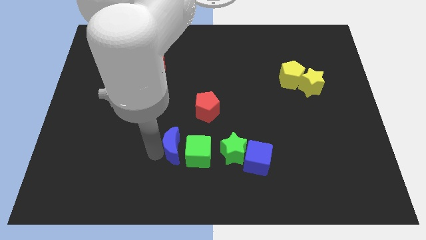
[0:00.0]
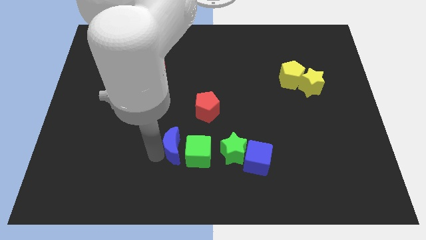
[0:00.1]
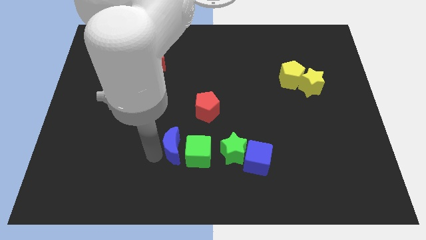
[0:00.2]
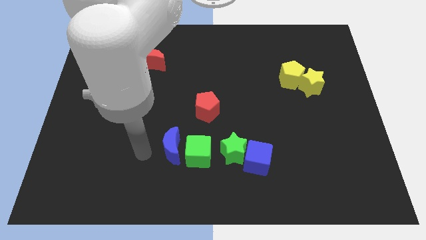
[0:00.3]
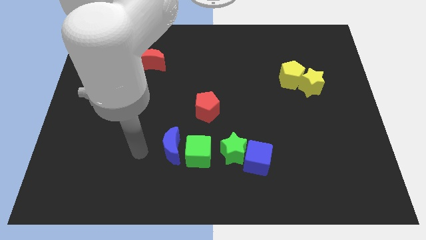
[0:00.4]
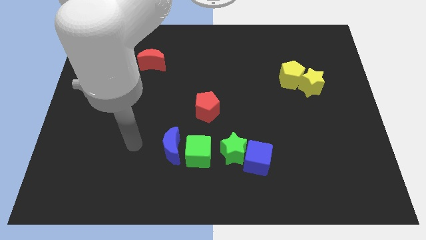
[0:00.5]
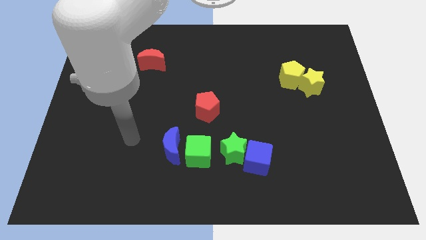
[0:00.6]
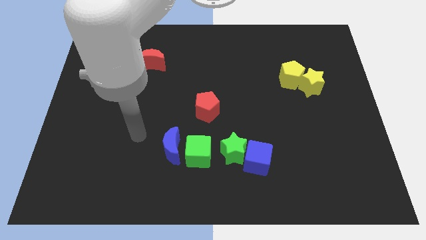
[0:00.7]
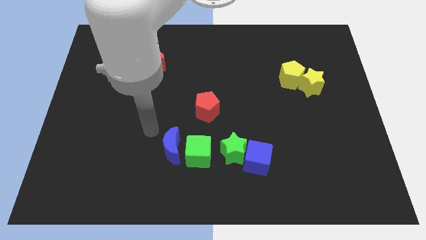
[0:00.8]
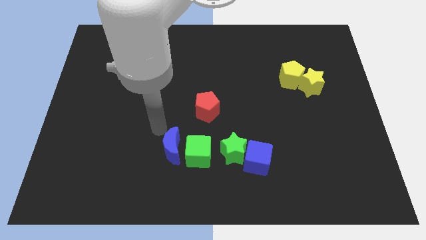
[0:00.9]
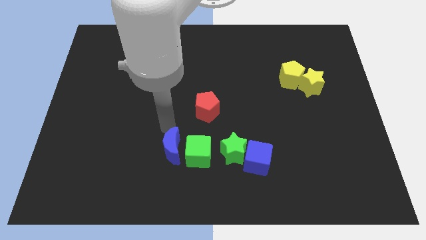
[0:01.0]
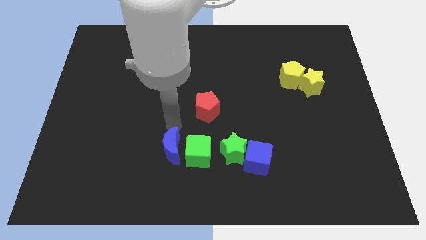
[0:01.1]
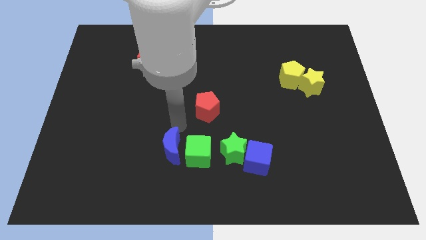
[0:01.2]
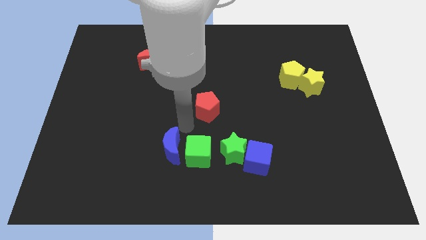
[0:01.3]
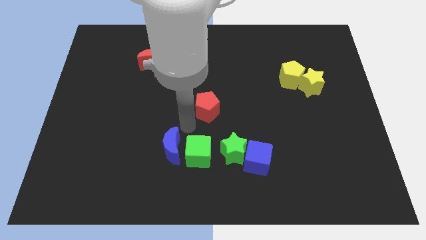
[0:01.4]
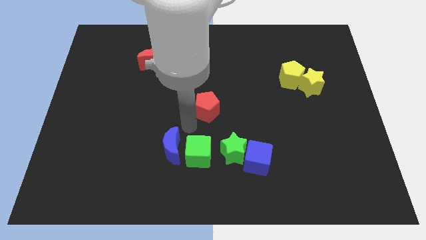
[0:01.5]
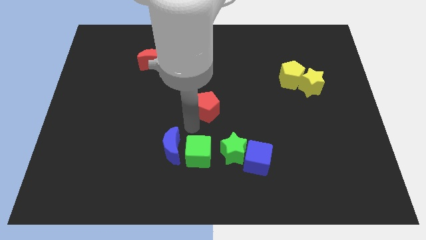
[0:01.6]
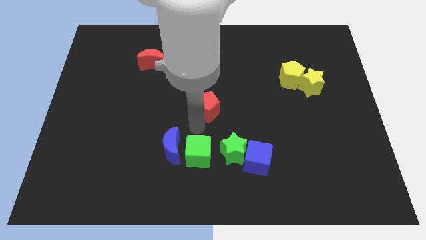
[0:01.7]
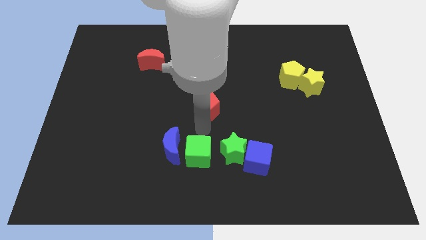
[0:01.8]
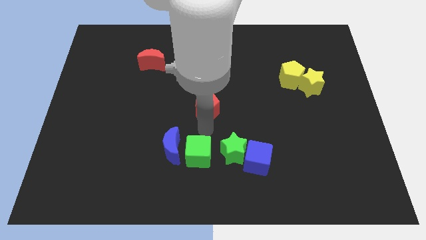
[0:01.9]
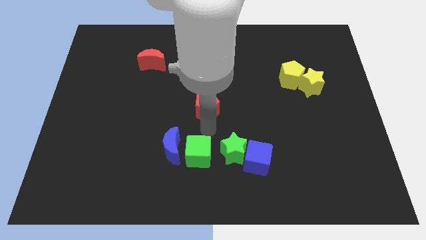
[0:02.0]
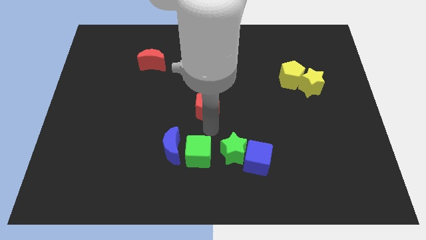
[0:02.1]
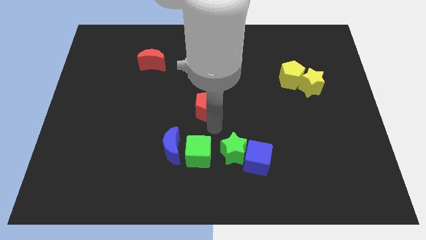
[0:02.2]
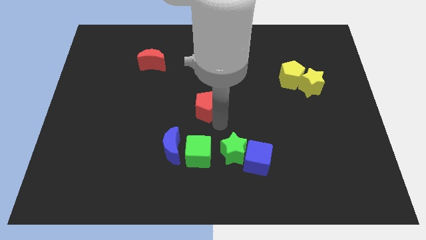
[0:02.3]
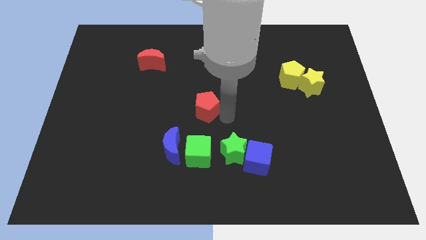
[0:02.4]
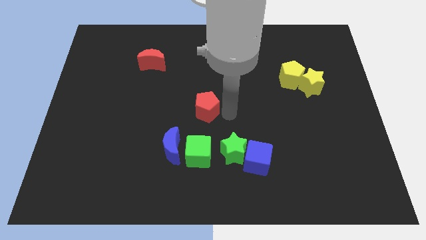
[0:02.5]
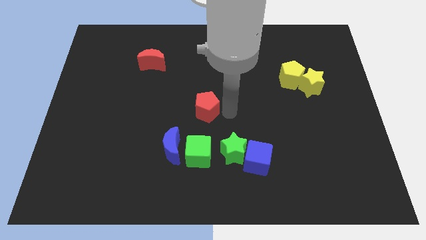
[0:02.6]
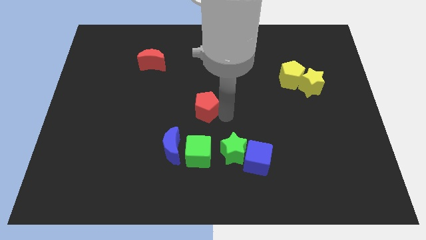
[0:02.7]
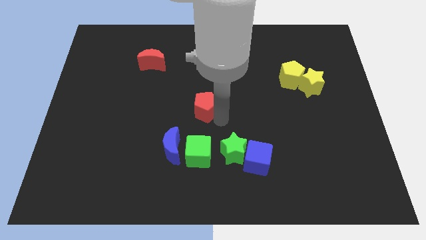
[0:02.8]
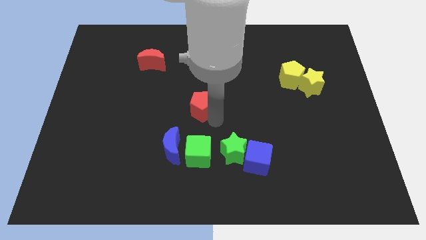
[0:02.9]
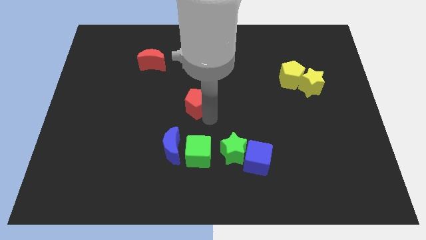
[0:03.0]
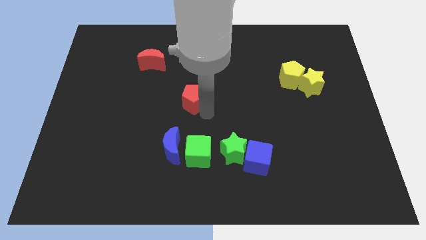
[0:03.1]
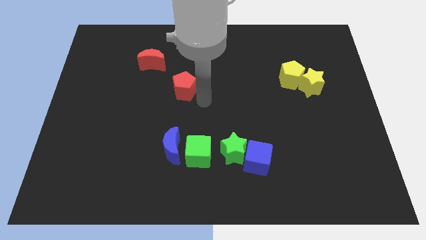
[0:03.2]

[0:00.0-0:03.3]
slightly move the red pentagon up a bit

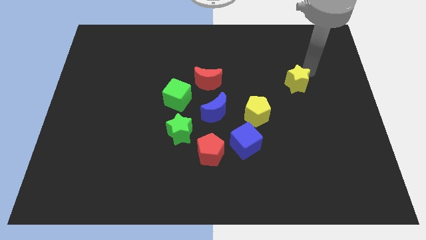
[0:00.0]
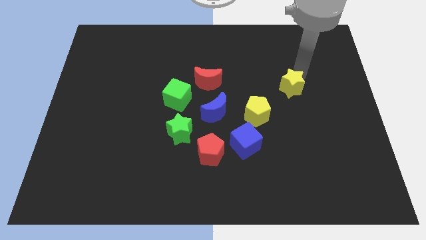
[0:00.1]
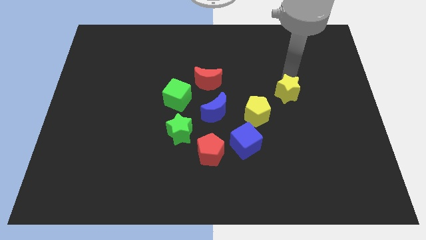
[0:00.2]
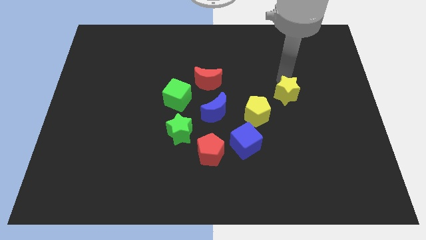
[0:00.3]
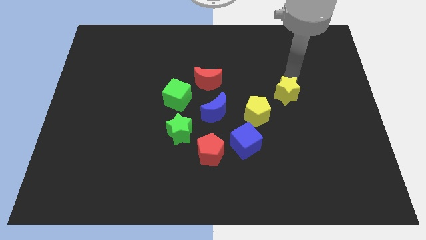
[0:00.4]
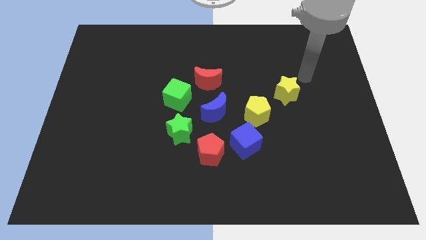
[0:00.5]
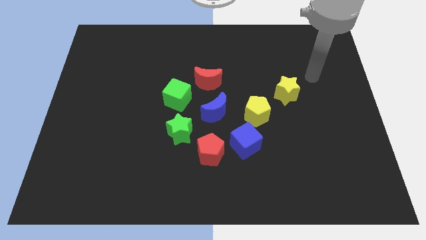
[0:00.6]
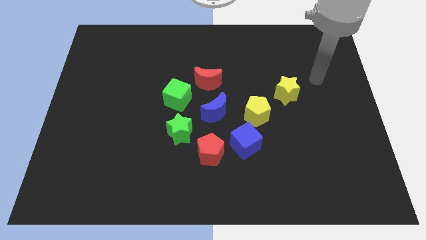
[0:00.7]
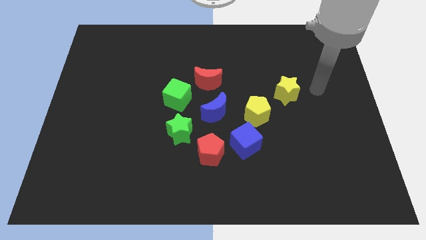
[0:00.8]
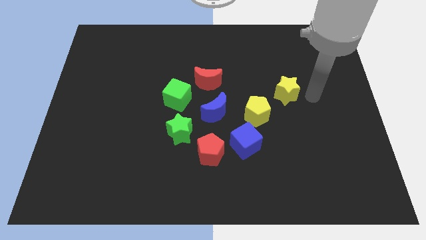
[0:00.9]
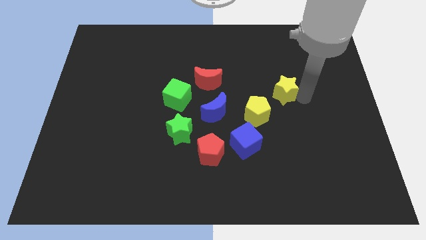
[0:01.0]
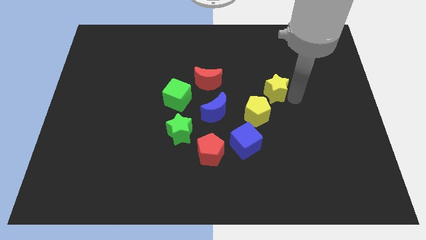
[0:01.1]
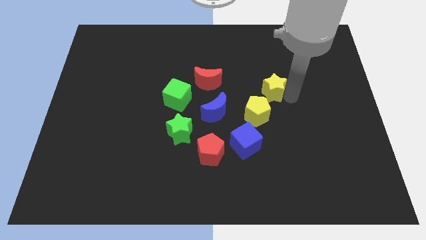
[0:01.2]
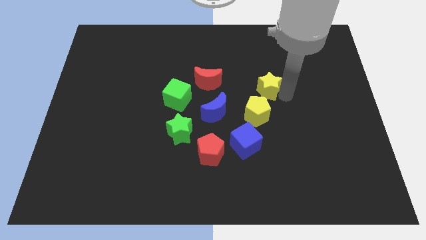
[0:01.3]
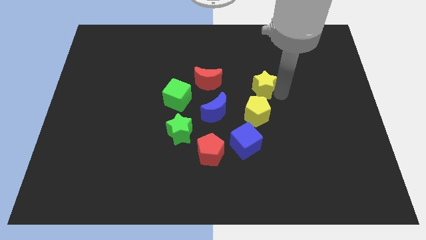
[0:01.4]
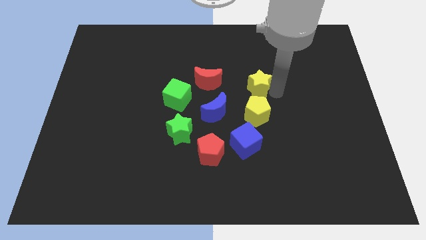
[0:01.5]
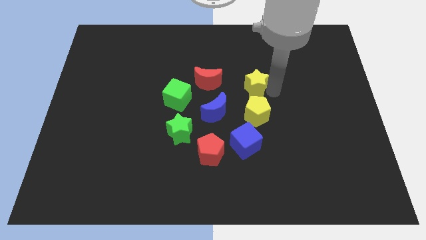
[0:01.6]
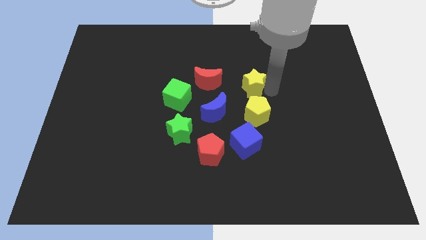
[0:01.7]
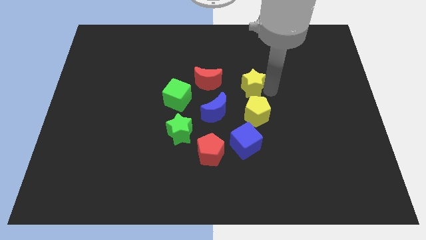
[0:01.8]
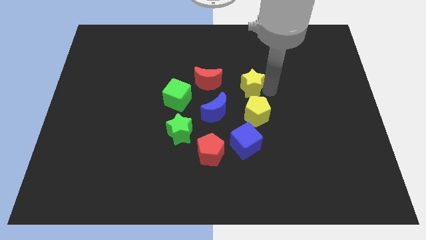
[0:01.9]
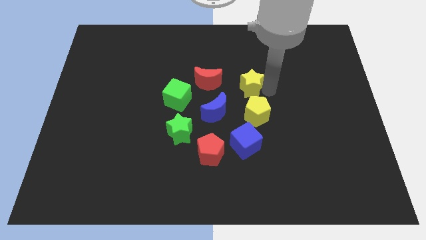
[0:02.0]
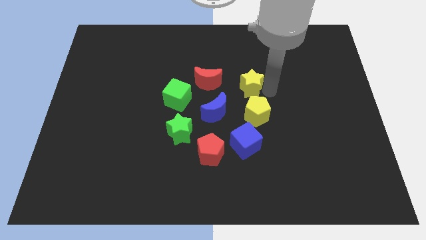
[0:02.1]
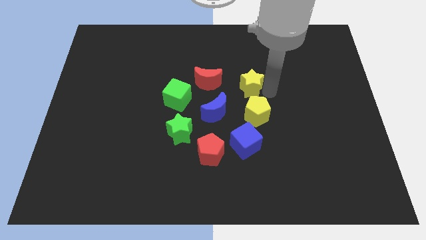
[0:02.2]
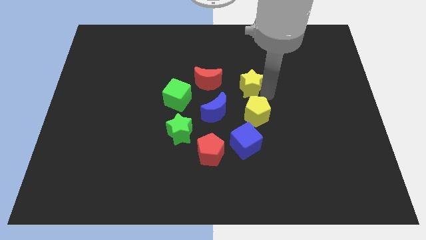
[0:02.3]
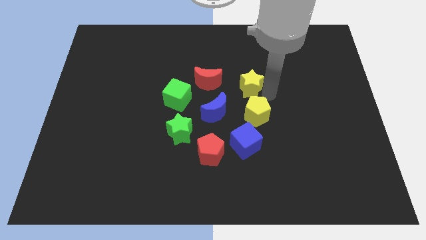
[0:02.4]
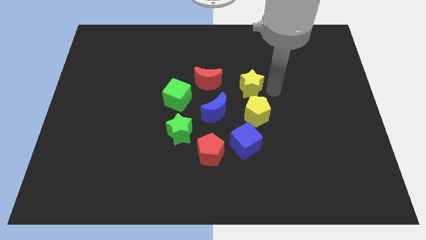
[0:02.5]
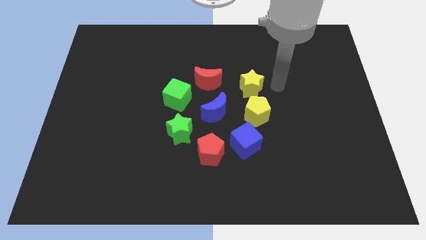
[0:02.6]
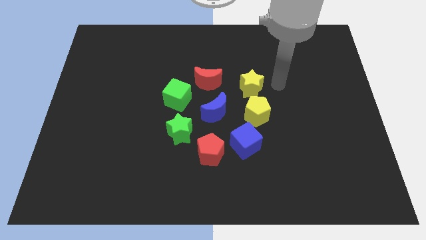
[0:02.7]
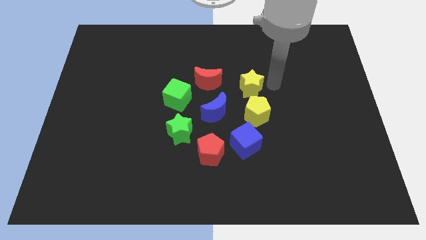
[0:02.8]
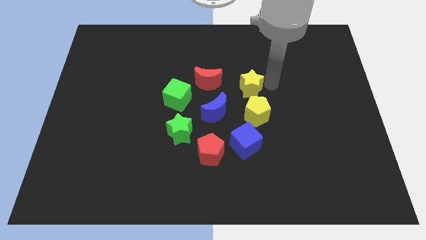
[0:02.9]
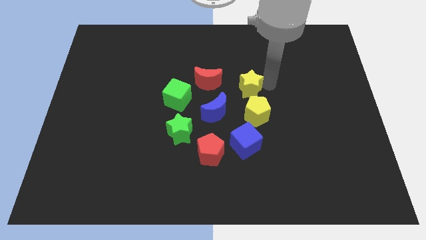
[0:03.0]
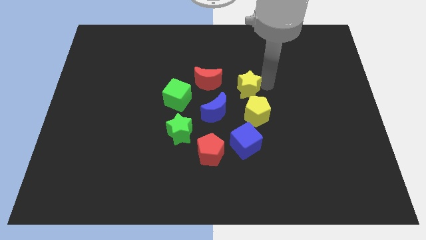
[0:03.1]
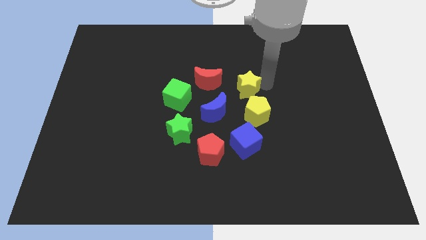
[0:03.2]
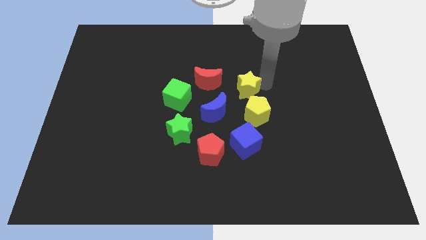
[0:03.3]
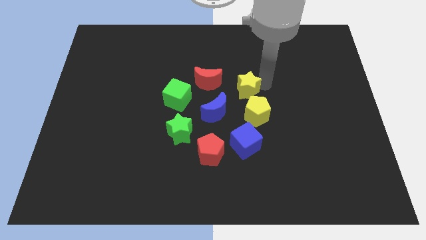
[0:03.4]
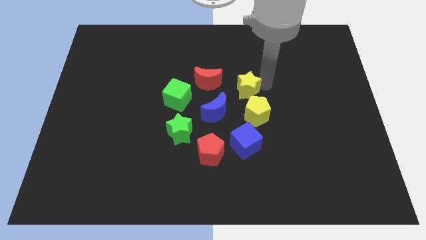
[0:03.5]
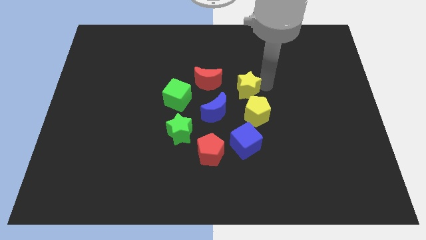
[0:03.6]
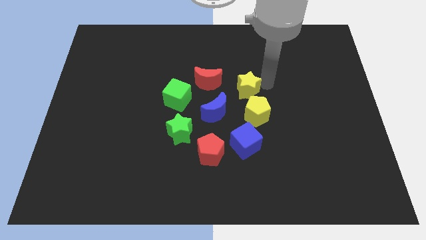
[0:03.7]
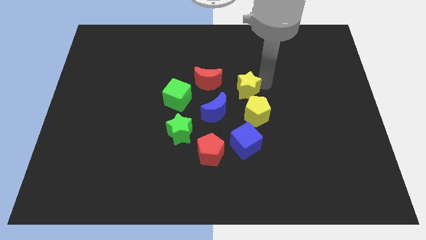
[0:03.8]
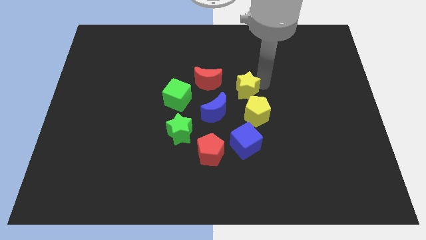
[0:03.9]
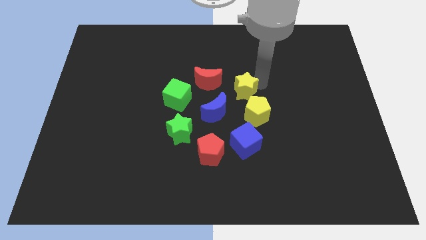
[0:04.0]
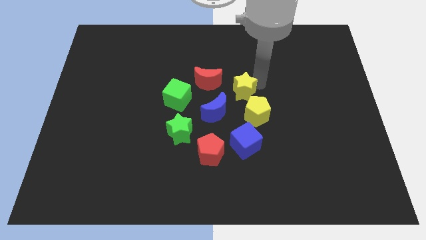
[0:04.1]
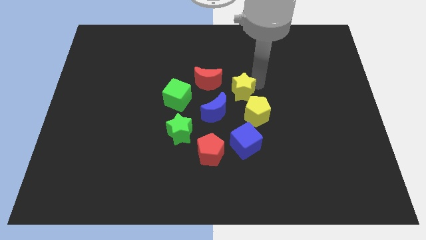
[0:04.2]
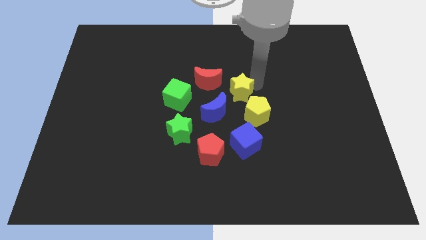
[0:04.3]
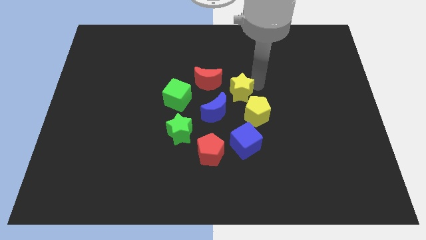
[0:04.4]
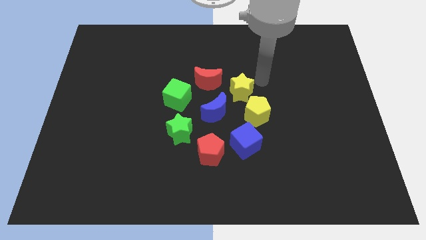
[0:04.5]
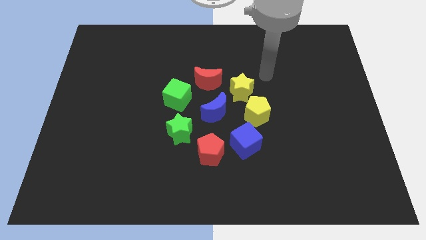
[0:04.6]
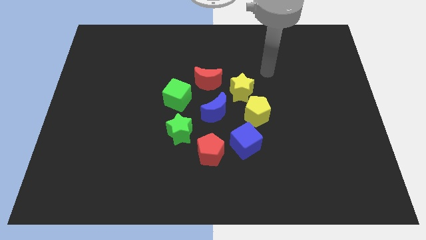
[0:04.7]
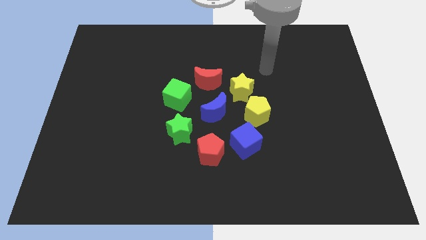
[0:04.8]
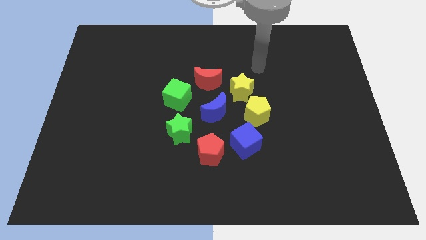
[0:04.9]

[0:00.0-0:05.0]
finish the formation of circle by adding yellow star to the arrangement

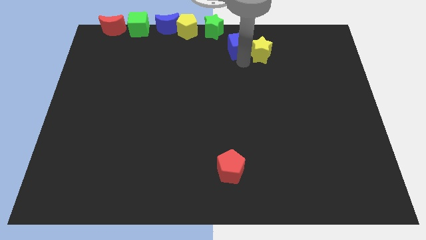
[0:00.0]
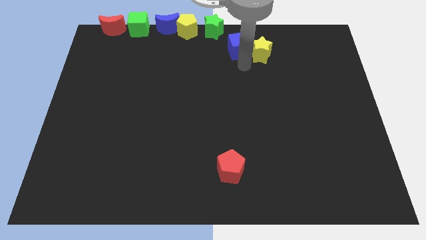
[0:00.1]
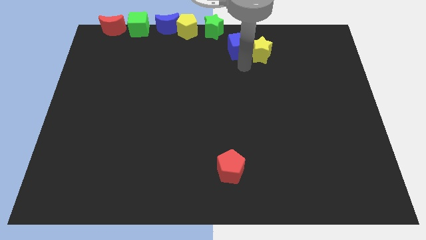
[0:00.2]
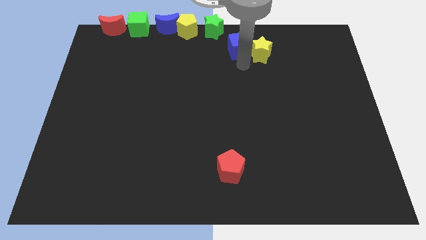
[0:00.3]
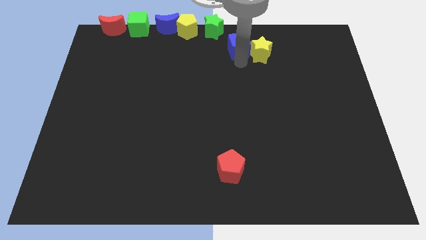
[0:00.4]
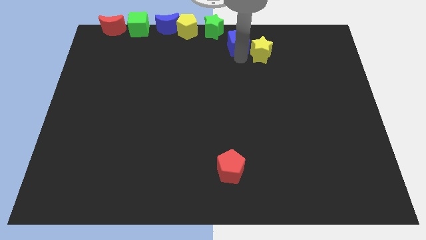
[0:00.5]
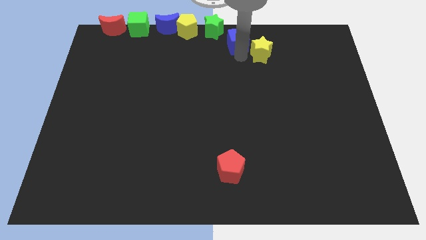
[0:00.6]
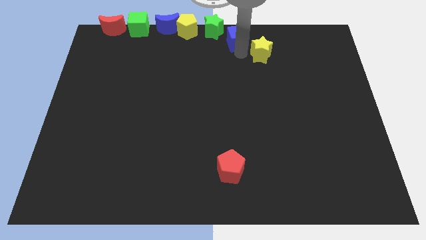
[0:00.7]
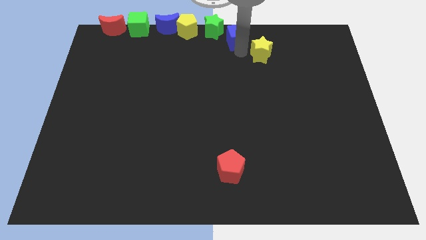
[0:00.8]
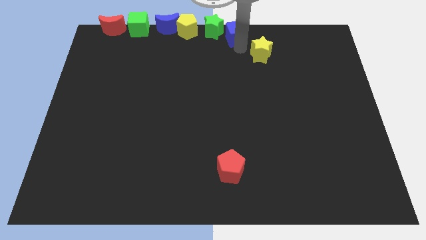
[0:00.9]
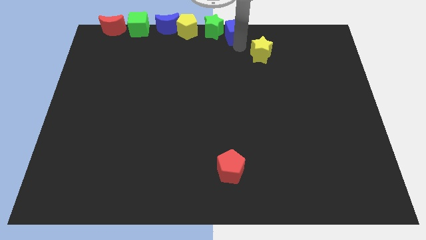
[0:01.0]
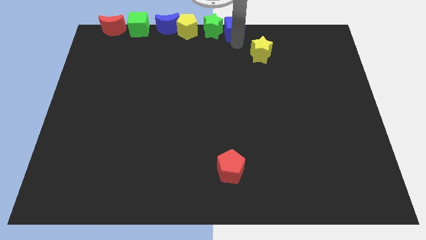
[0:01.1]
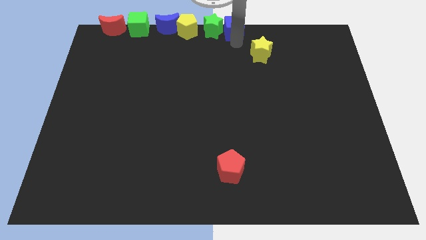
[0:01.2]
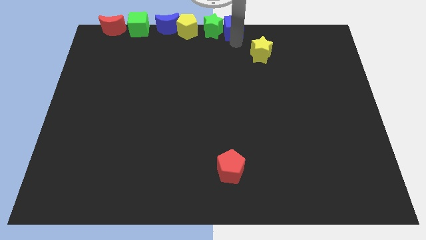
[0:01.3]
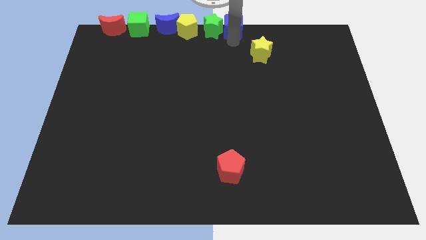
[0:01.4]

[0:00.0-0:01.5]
move the blue cube to the right of the green star
